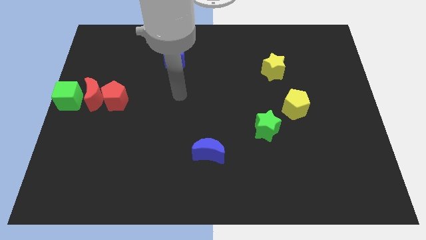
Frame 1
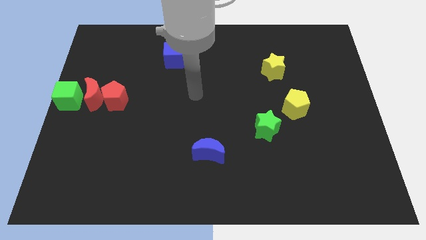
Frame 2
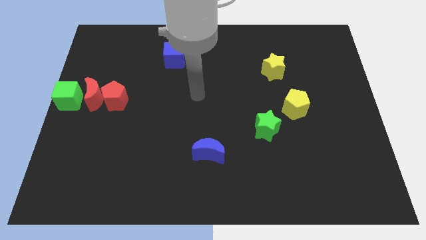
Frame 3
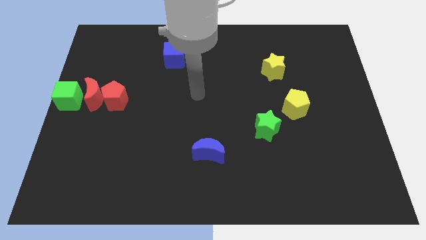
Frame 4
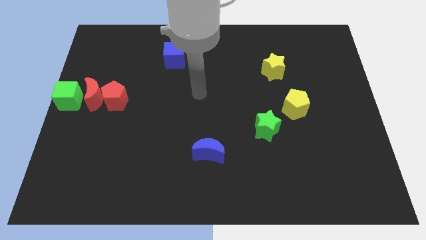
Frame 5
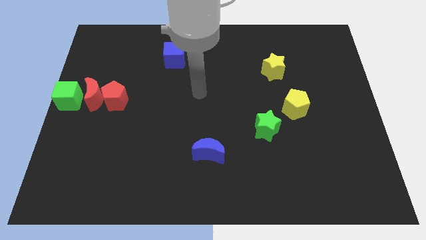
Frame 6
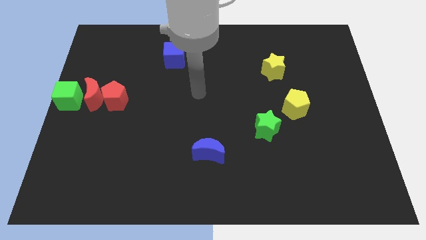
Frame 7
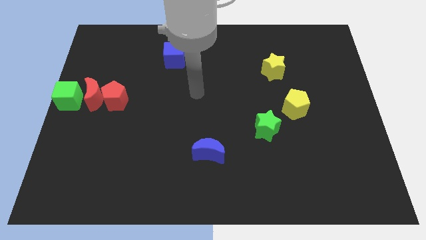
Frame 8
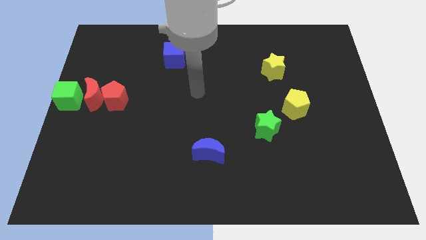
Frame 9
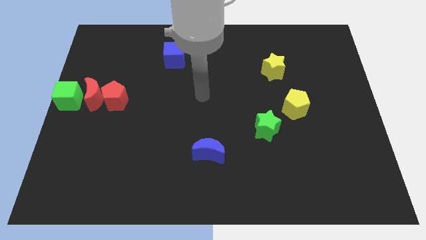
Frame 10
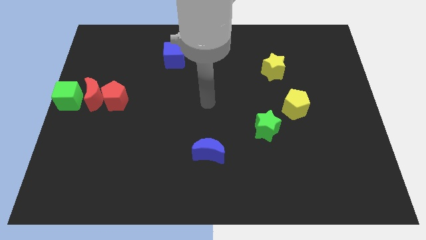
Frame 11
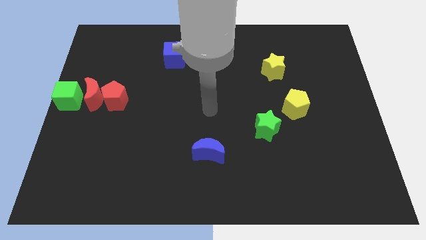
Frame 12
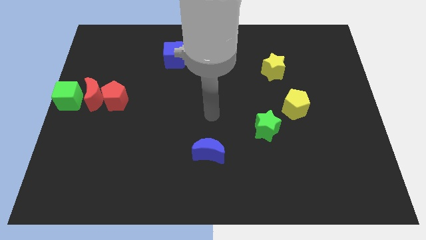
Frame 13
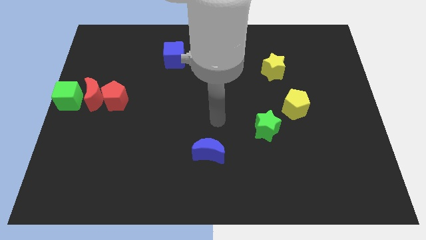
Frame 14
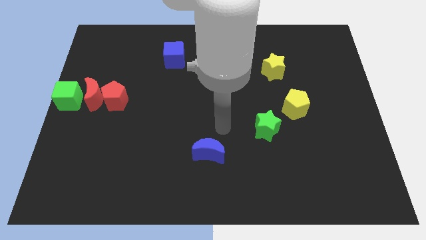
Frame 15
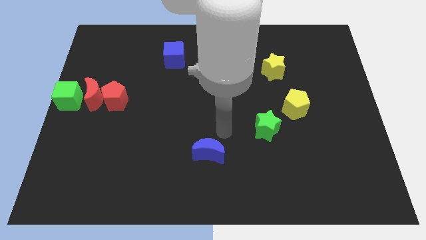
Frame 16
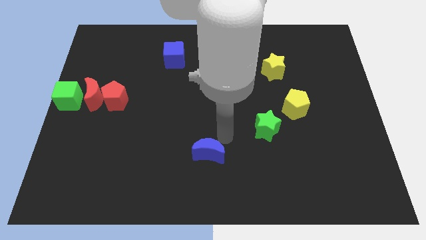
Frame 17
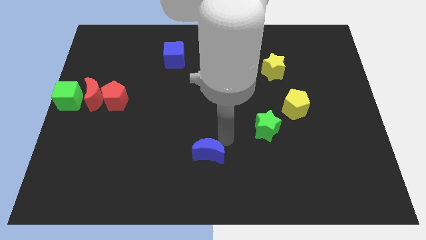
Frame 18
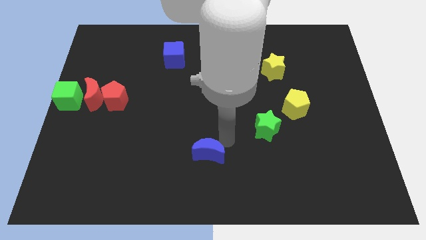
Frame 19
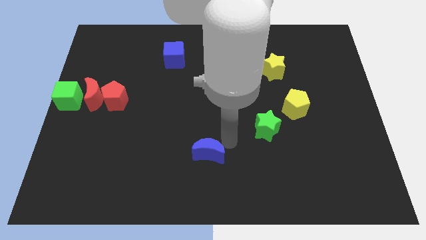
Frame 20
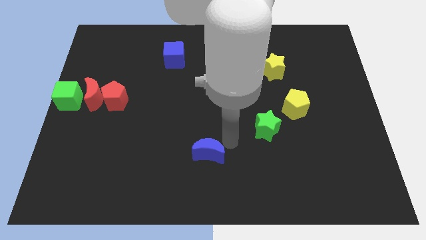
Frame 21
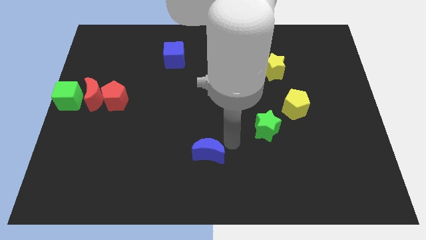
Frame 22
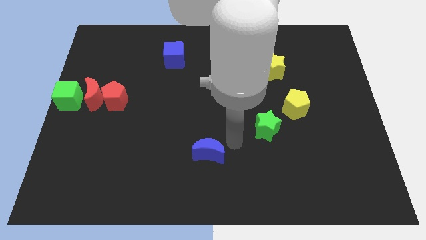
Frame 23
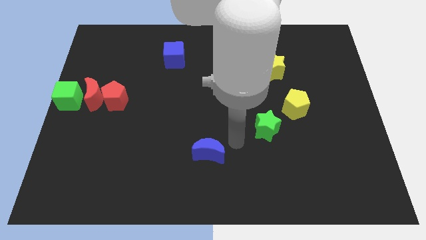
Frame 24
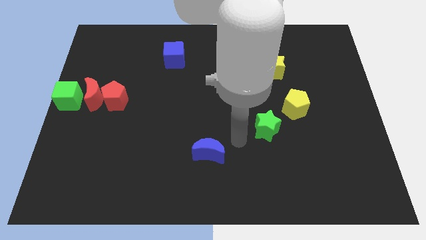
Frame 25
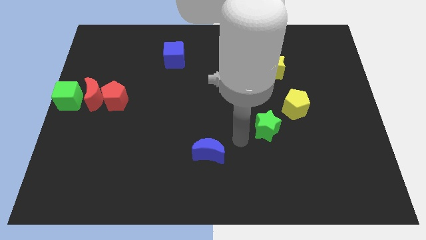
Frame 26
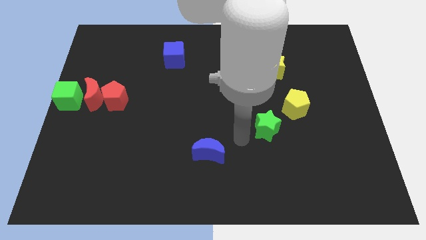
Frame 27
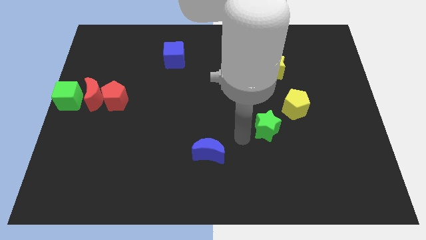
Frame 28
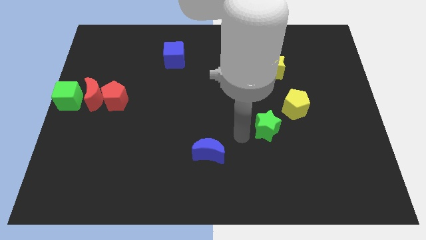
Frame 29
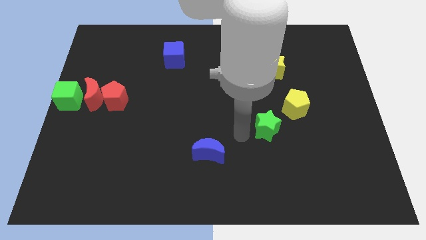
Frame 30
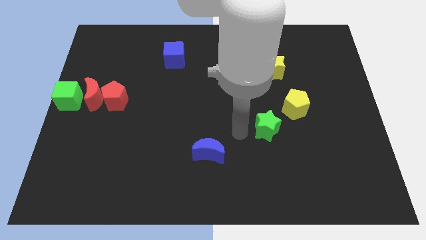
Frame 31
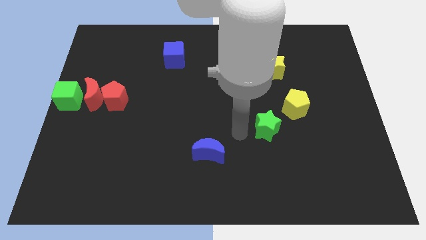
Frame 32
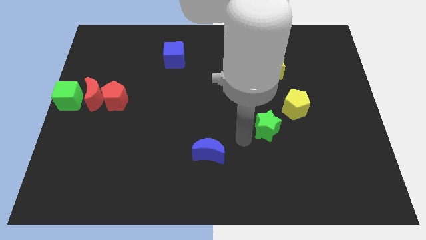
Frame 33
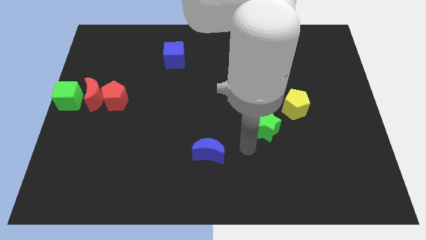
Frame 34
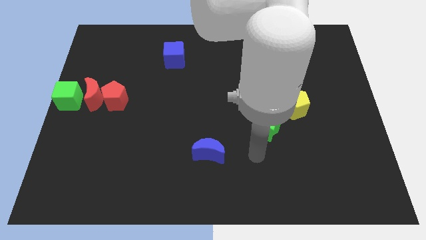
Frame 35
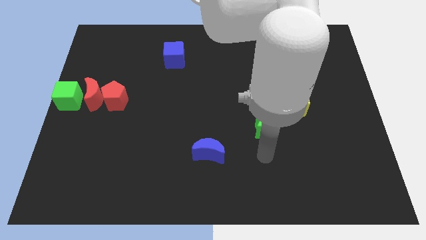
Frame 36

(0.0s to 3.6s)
move the arm to the bottom of the green star

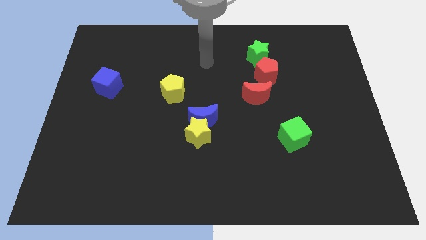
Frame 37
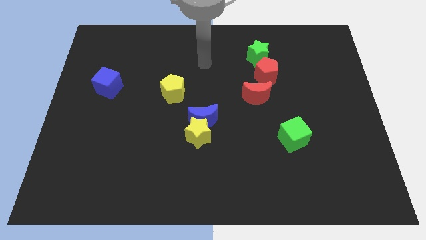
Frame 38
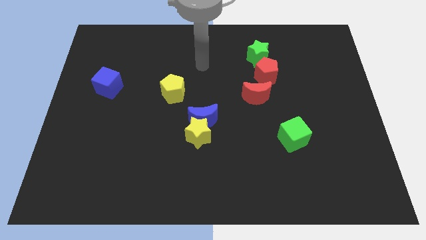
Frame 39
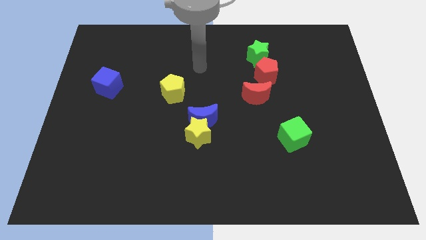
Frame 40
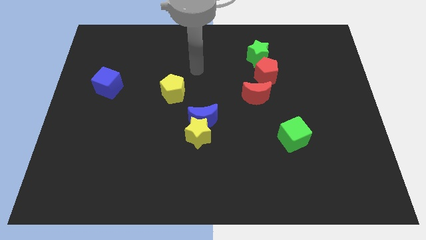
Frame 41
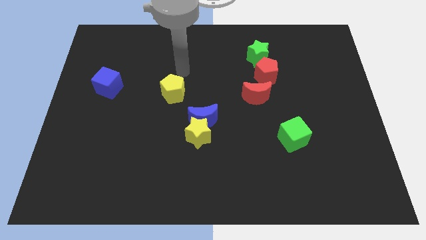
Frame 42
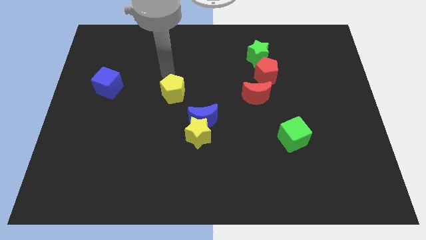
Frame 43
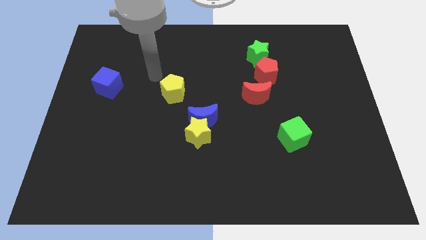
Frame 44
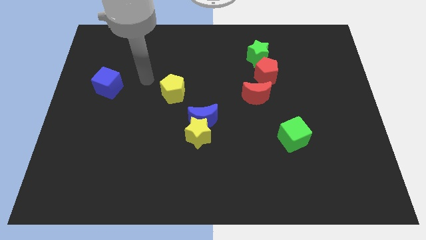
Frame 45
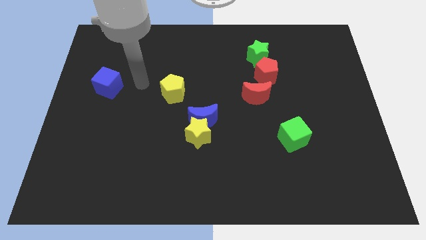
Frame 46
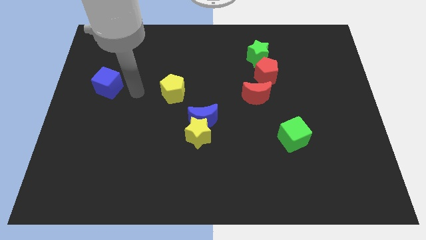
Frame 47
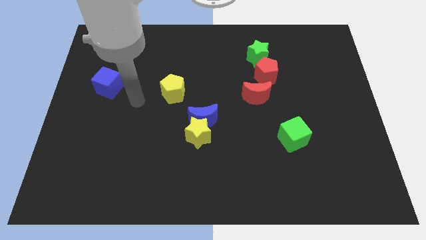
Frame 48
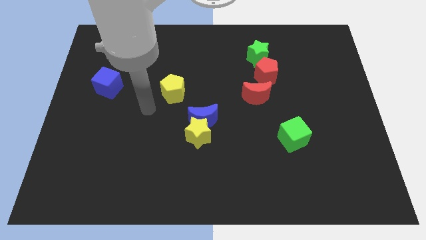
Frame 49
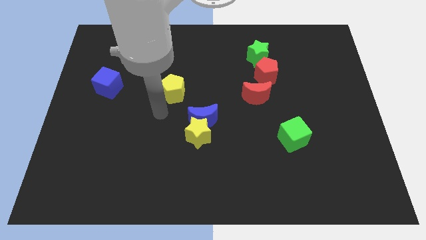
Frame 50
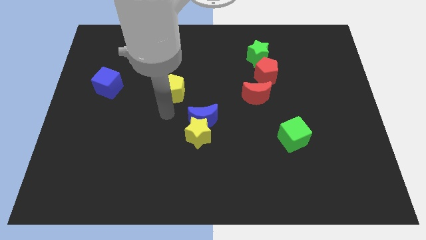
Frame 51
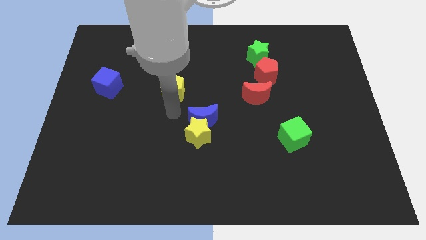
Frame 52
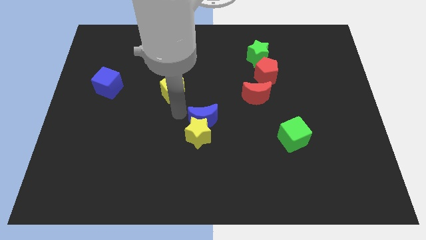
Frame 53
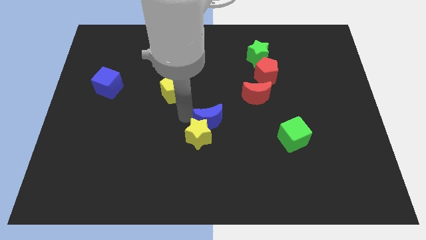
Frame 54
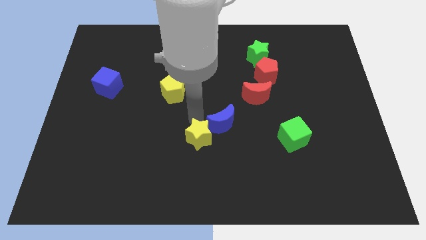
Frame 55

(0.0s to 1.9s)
put your arm to the left of the blue moon

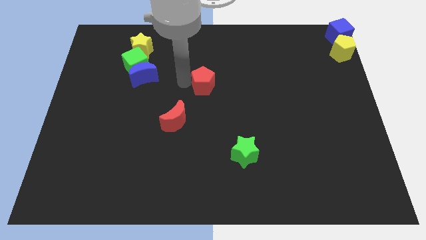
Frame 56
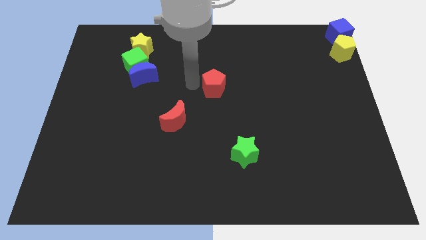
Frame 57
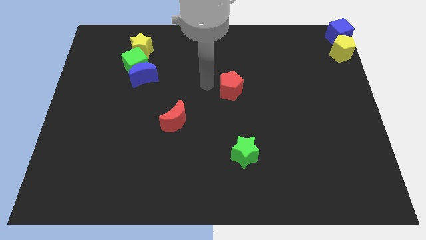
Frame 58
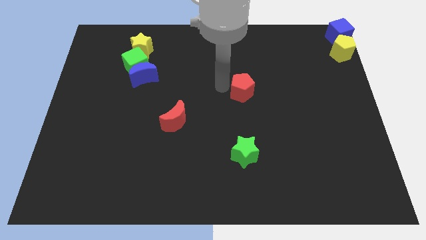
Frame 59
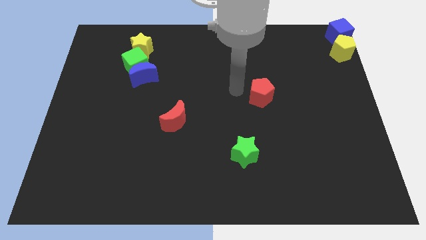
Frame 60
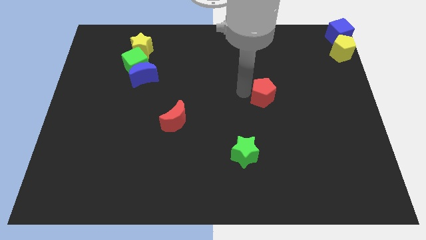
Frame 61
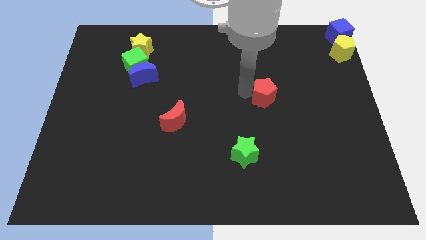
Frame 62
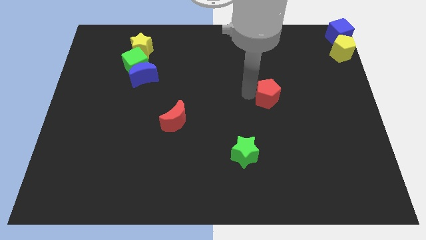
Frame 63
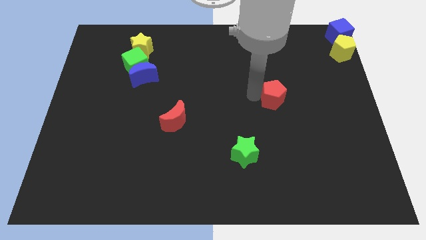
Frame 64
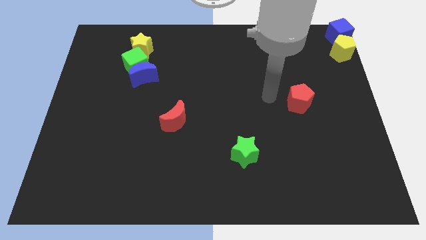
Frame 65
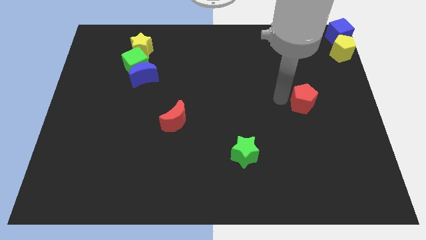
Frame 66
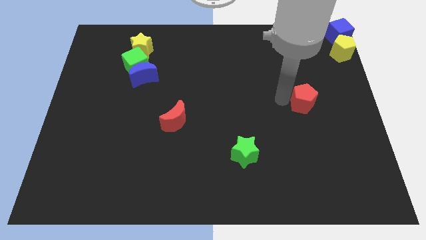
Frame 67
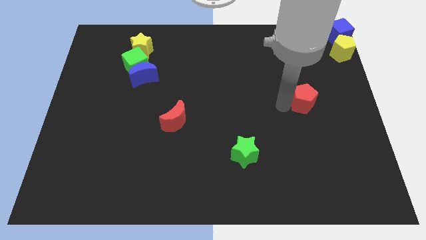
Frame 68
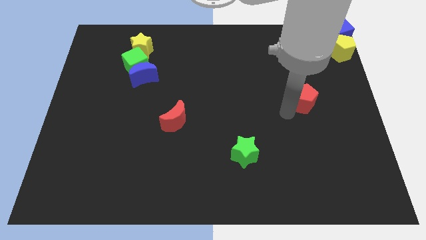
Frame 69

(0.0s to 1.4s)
push the red pentagon towards the right center to the board

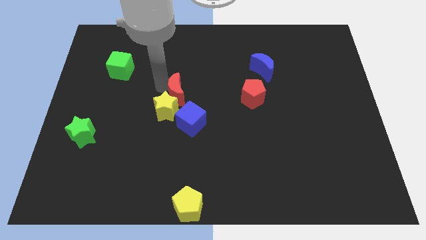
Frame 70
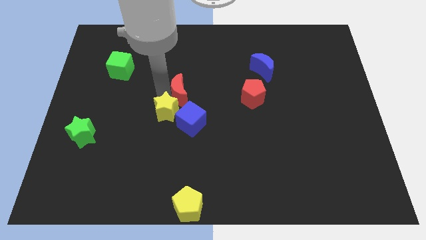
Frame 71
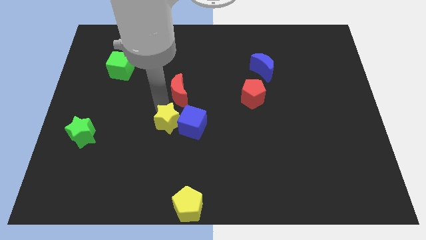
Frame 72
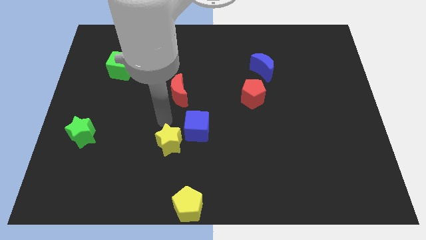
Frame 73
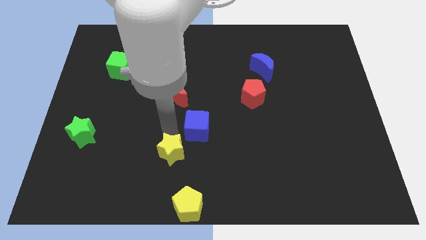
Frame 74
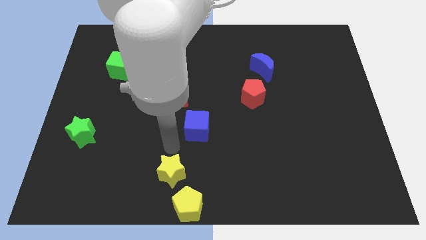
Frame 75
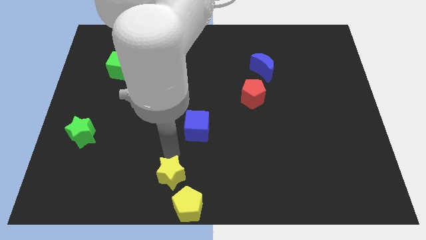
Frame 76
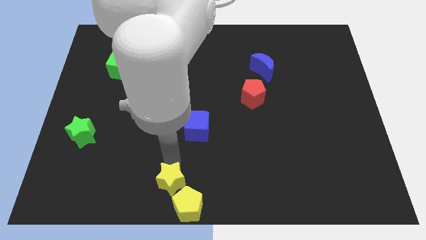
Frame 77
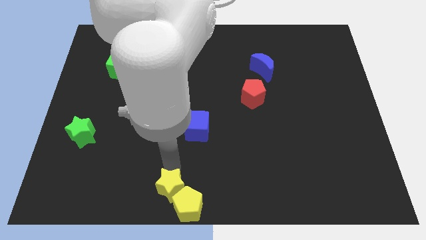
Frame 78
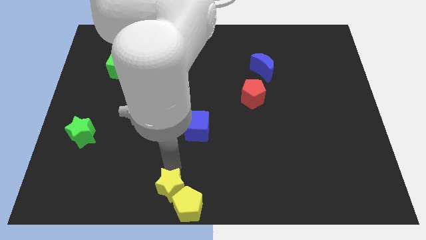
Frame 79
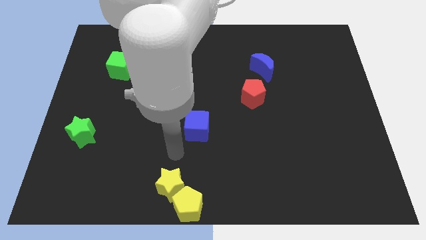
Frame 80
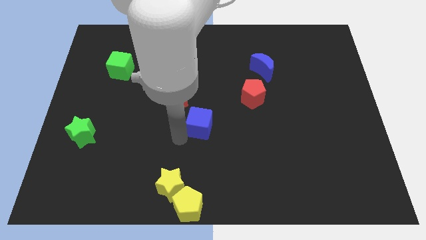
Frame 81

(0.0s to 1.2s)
slide the yellow star into the yellow pentagon

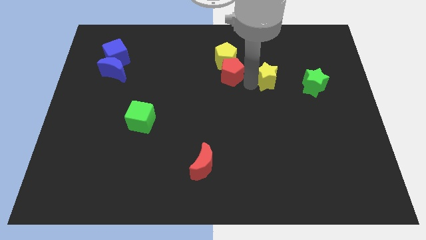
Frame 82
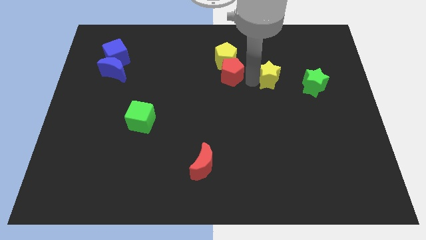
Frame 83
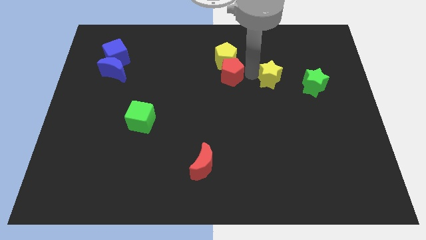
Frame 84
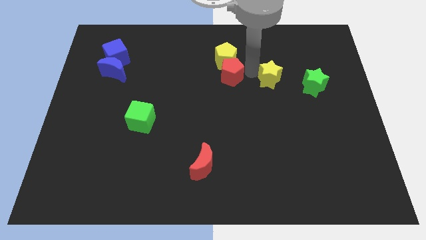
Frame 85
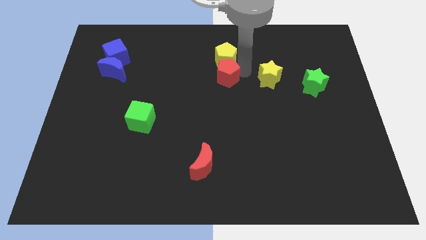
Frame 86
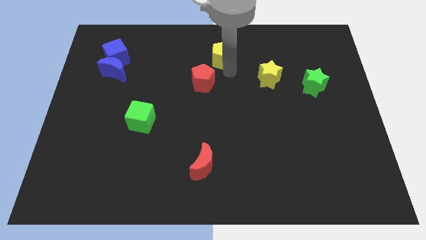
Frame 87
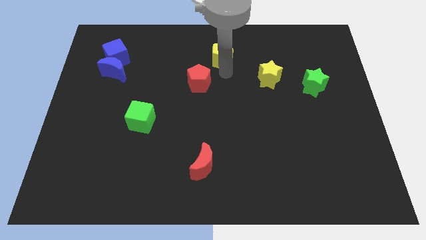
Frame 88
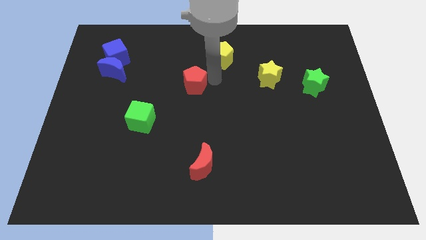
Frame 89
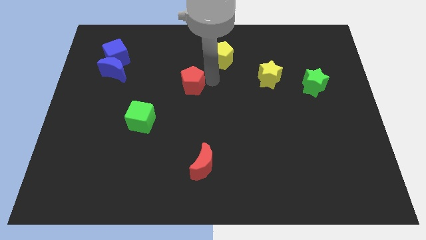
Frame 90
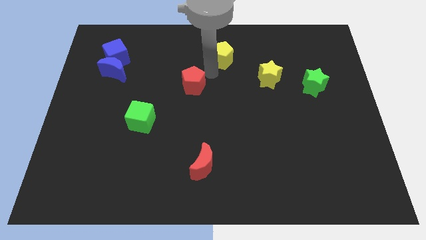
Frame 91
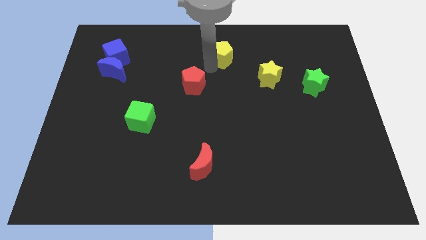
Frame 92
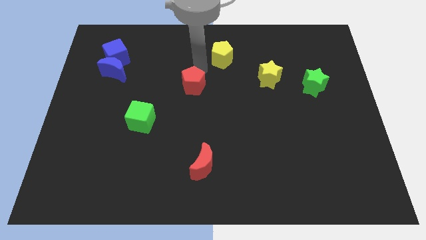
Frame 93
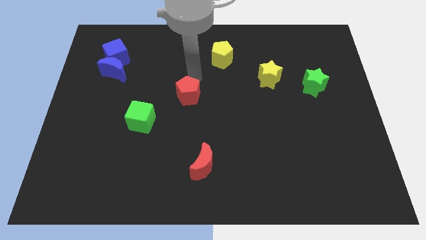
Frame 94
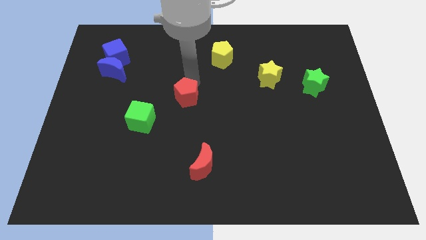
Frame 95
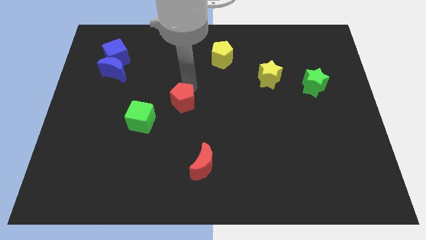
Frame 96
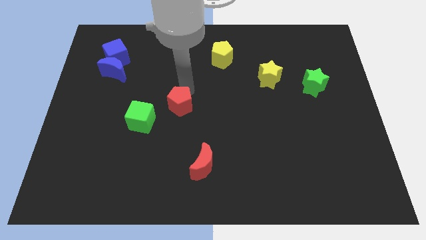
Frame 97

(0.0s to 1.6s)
push the red pentagon to the top right side of the green ccube
